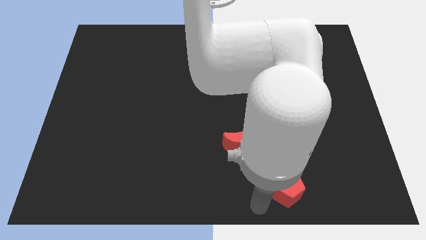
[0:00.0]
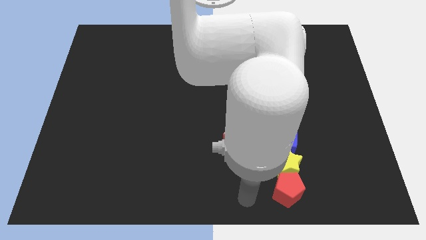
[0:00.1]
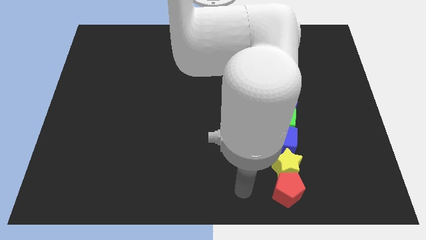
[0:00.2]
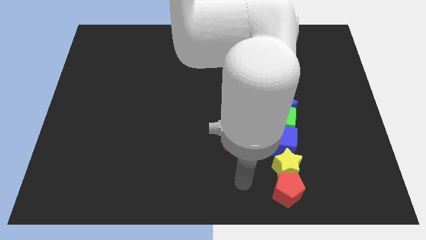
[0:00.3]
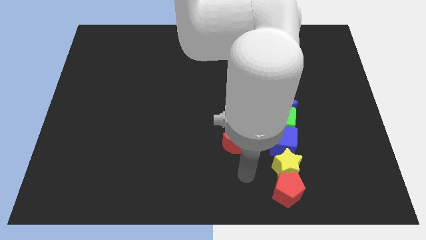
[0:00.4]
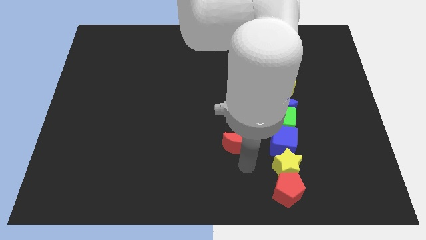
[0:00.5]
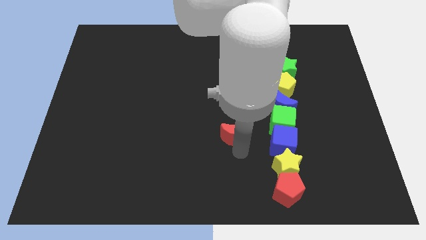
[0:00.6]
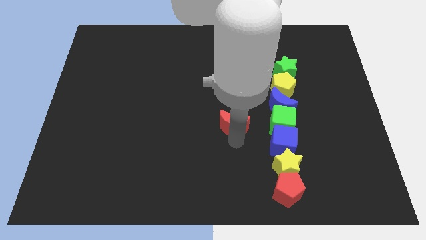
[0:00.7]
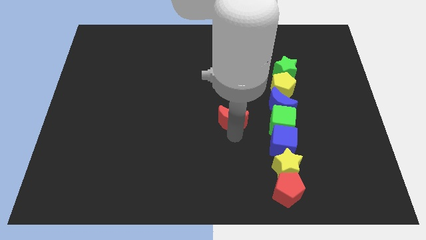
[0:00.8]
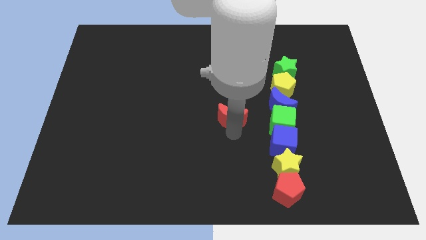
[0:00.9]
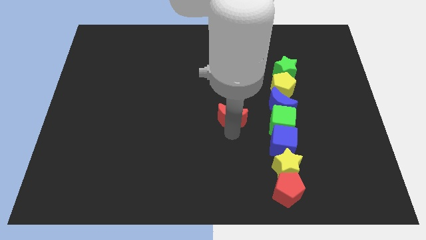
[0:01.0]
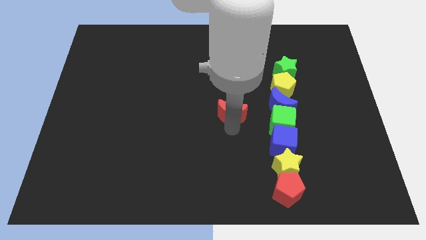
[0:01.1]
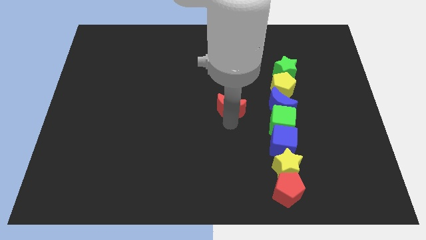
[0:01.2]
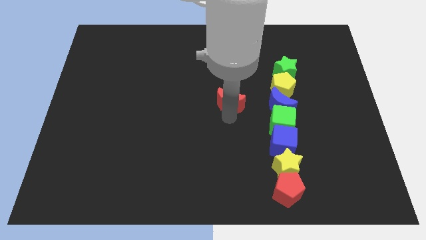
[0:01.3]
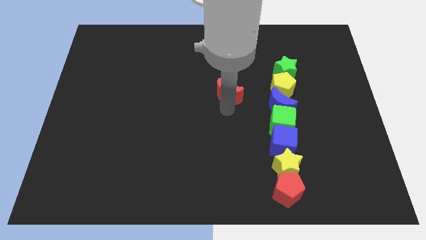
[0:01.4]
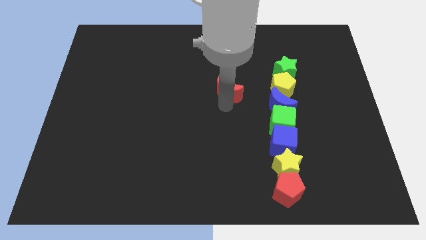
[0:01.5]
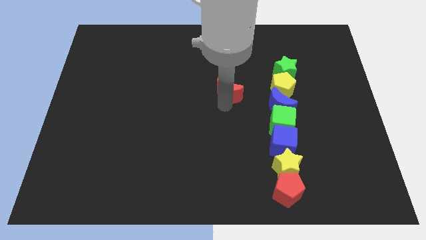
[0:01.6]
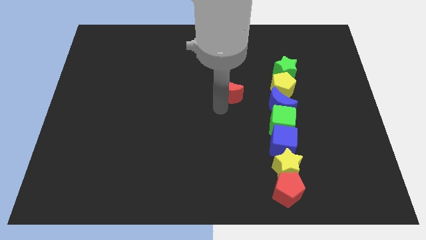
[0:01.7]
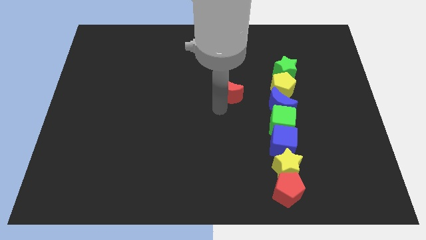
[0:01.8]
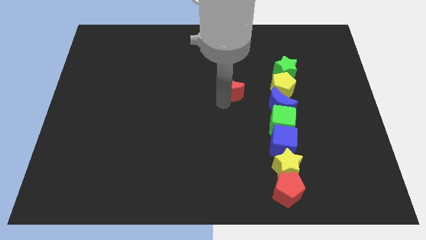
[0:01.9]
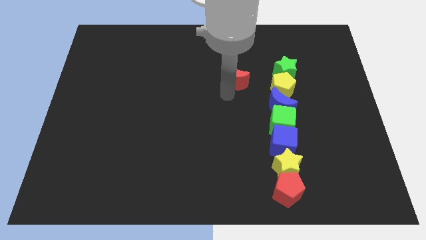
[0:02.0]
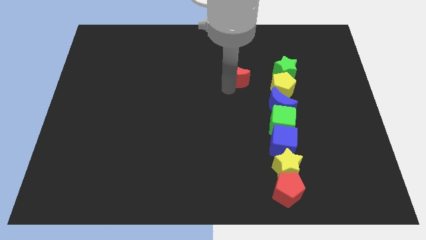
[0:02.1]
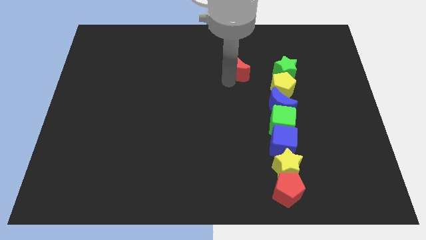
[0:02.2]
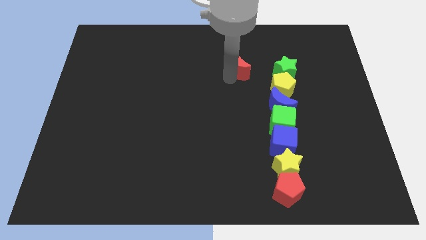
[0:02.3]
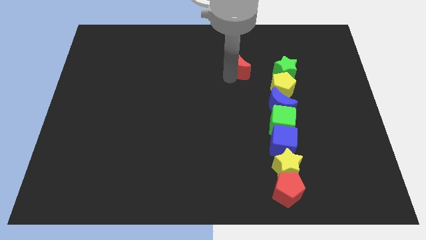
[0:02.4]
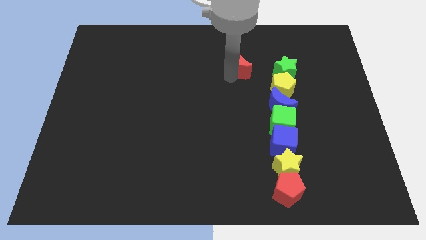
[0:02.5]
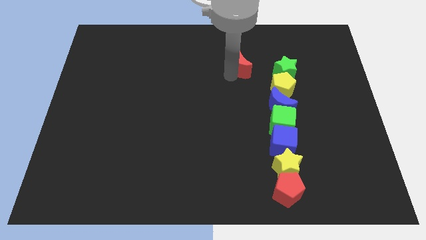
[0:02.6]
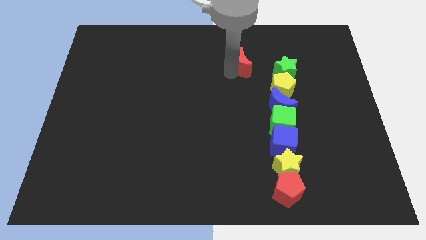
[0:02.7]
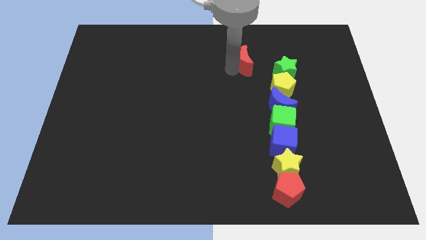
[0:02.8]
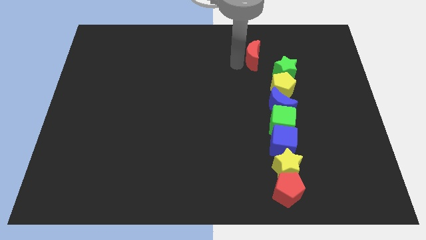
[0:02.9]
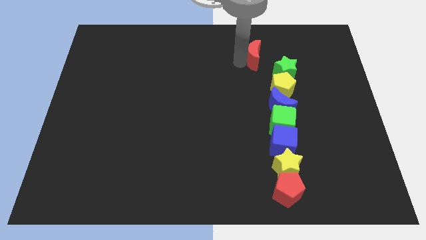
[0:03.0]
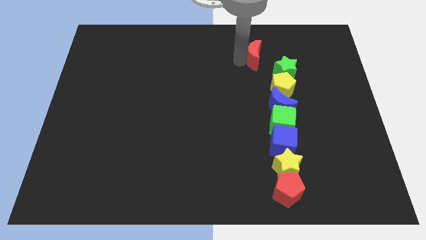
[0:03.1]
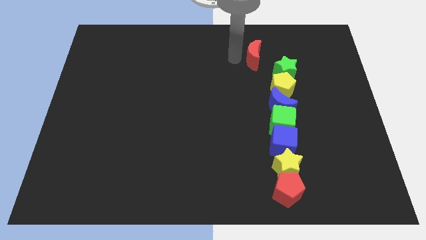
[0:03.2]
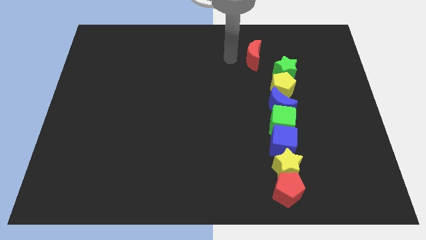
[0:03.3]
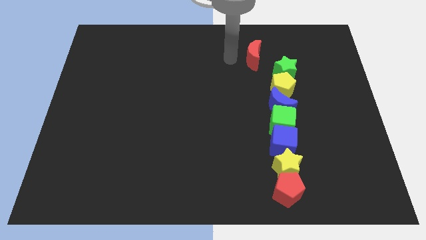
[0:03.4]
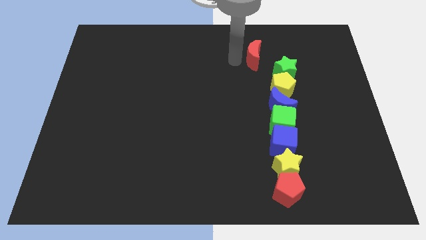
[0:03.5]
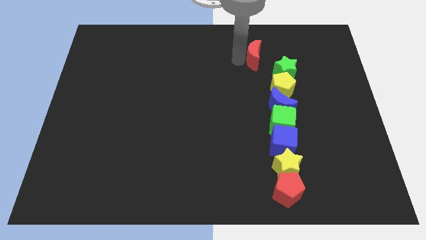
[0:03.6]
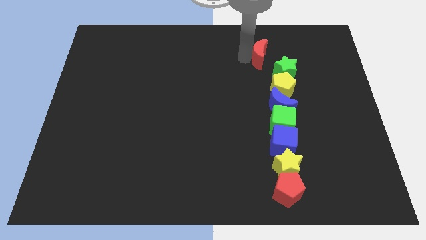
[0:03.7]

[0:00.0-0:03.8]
push the red moon towards the top side

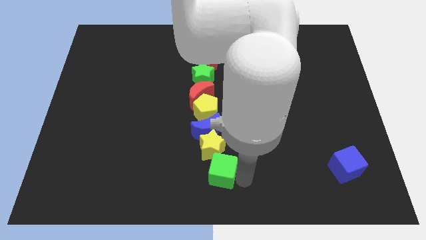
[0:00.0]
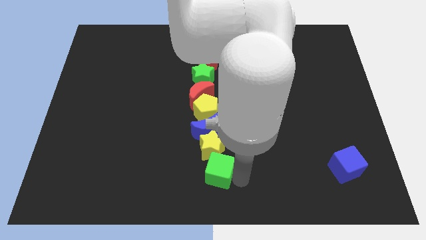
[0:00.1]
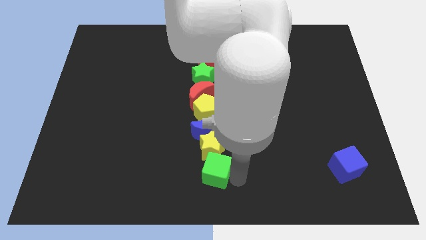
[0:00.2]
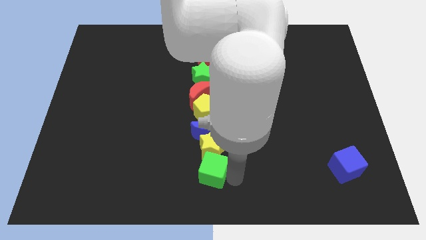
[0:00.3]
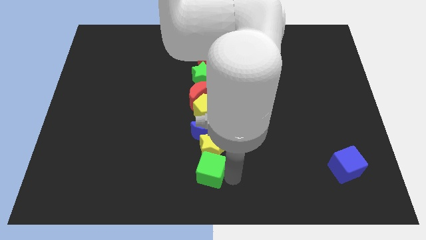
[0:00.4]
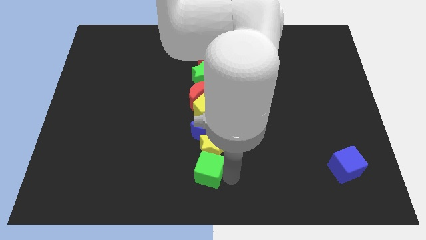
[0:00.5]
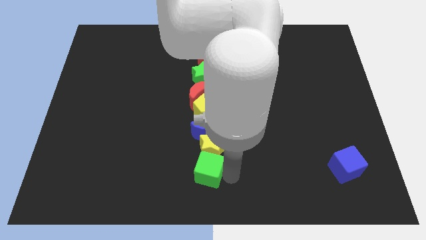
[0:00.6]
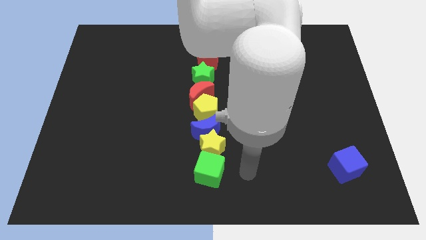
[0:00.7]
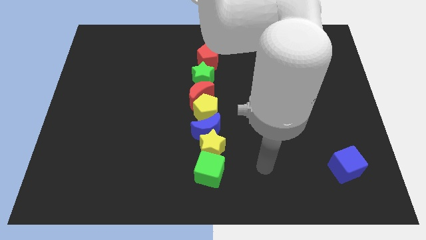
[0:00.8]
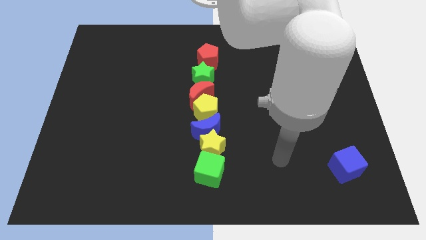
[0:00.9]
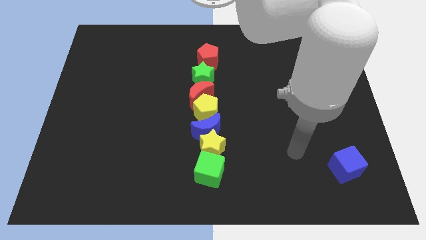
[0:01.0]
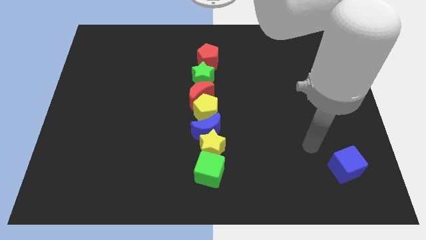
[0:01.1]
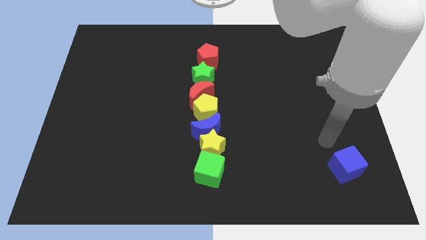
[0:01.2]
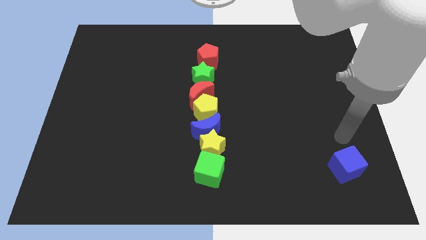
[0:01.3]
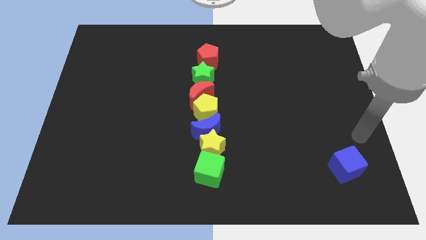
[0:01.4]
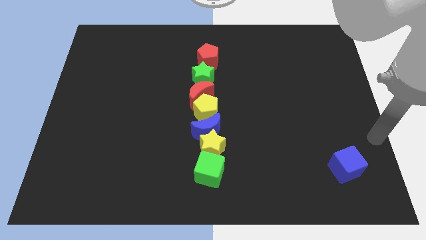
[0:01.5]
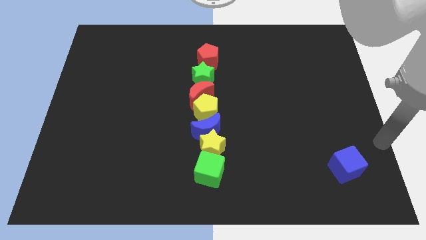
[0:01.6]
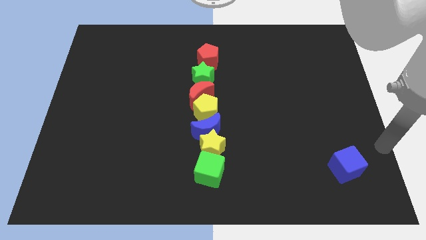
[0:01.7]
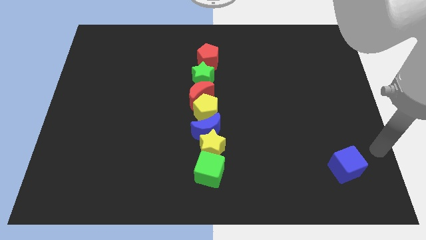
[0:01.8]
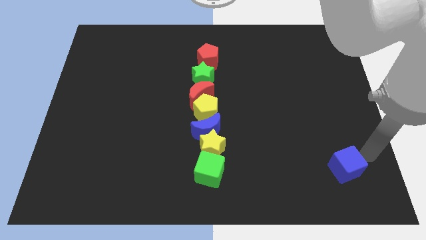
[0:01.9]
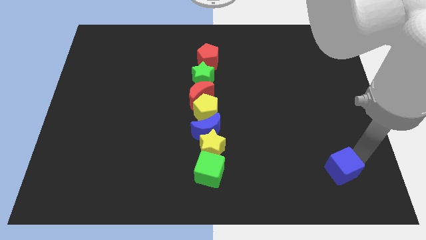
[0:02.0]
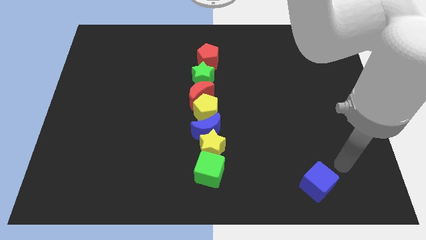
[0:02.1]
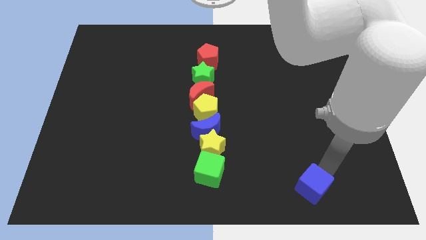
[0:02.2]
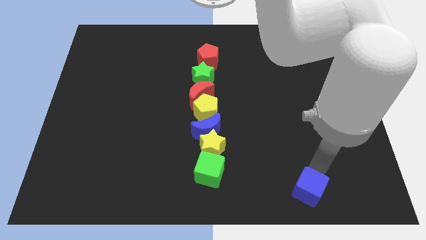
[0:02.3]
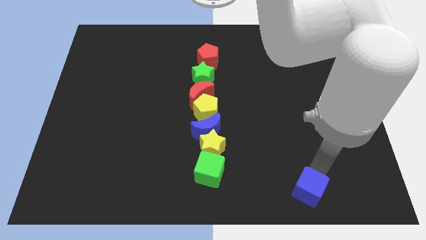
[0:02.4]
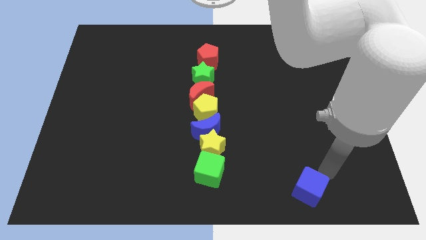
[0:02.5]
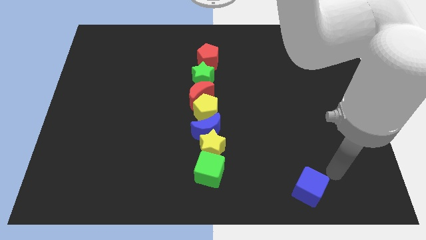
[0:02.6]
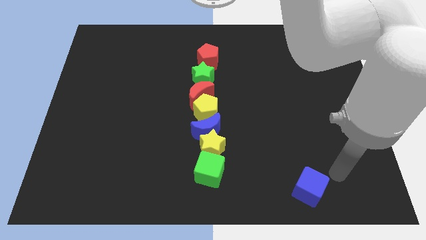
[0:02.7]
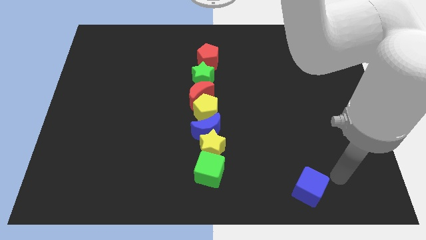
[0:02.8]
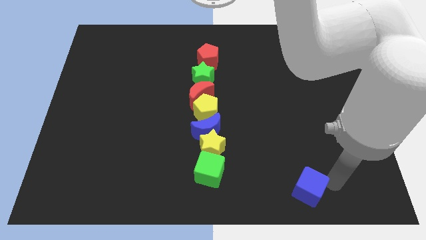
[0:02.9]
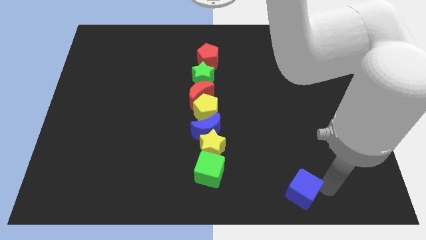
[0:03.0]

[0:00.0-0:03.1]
push the blue cube slightly to the left

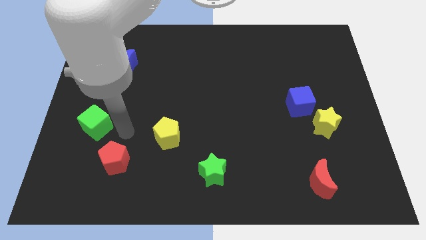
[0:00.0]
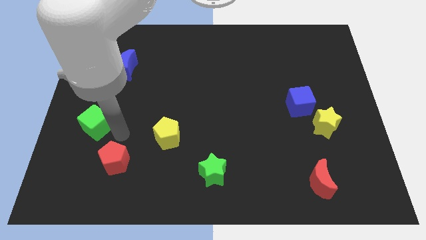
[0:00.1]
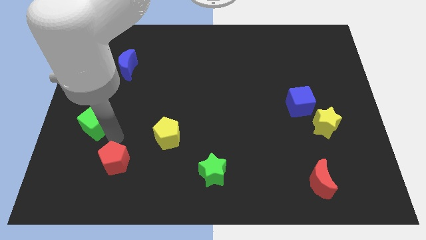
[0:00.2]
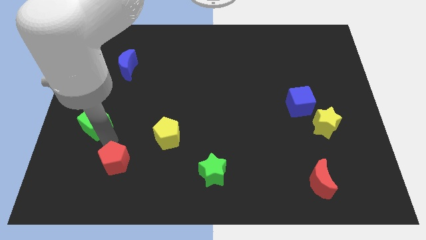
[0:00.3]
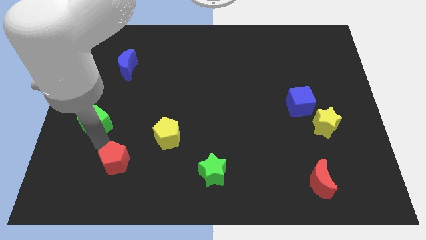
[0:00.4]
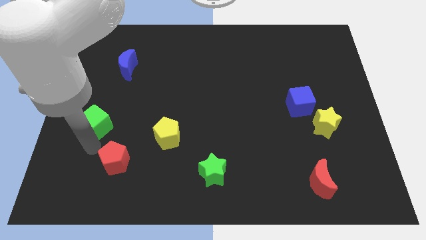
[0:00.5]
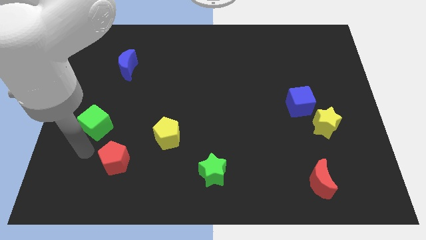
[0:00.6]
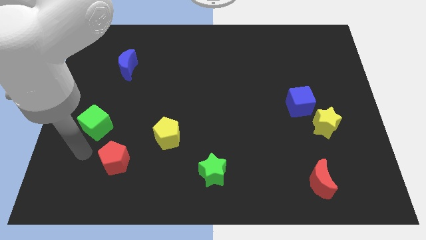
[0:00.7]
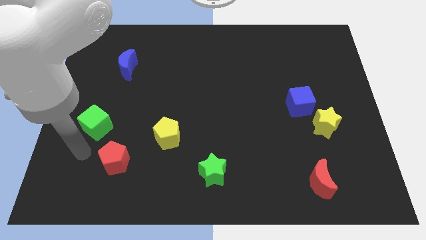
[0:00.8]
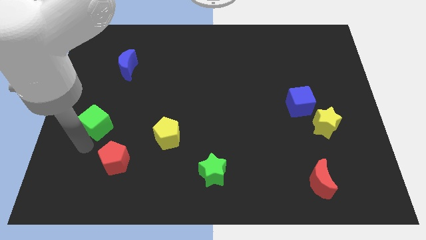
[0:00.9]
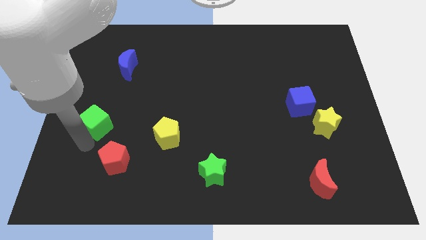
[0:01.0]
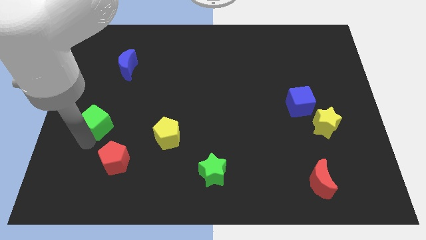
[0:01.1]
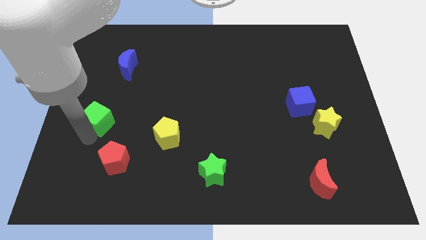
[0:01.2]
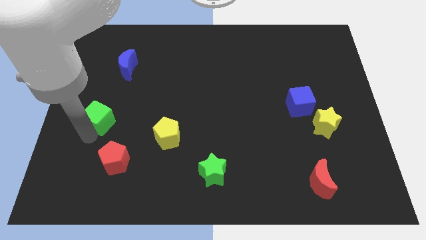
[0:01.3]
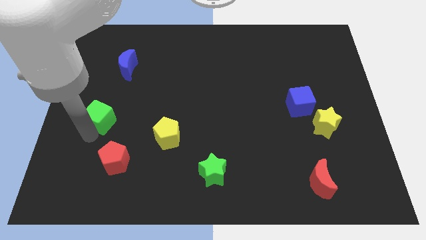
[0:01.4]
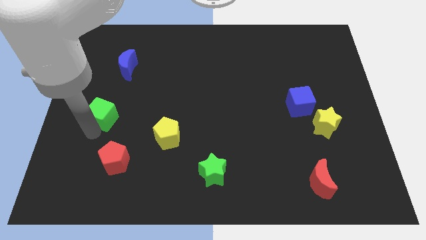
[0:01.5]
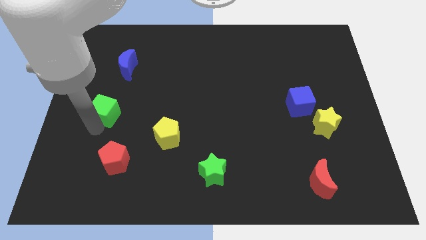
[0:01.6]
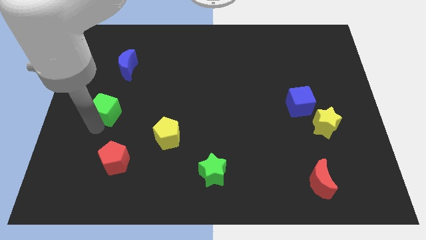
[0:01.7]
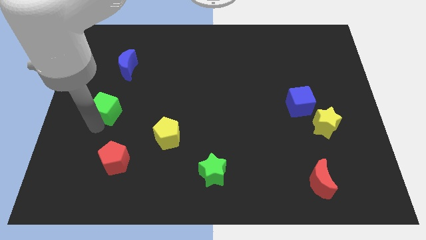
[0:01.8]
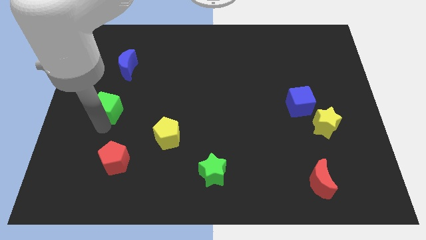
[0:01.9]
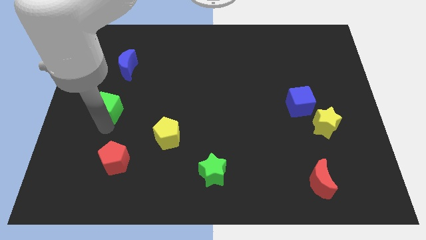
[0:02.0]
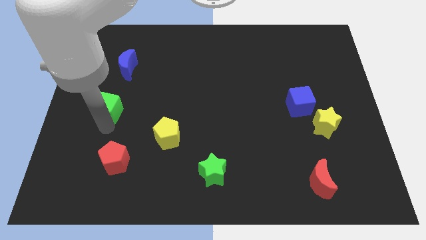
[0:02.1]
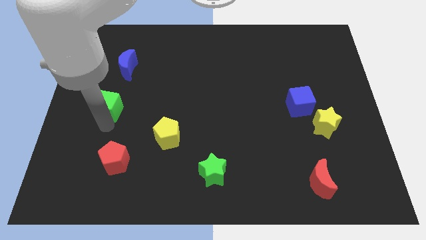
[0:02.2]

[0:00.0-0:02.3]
push the green cube above to the red pentagon
